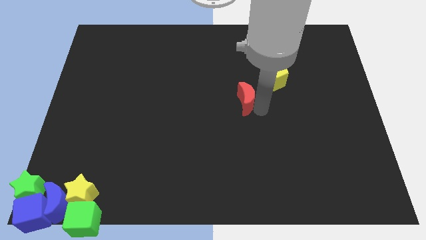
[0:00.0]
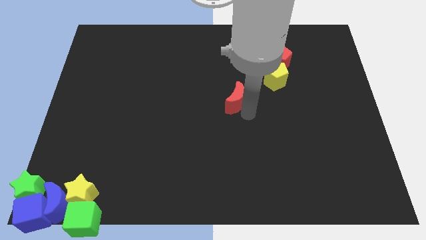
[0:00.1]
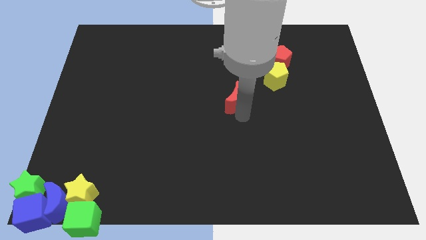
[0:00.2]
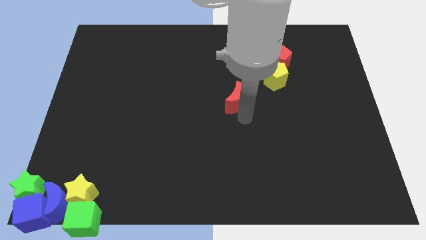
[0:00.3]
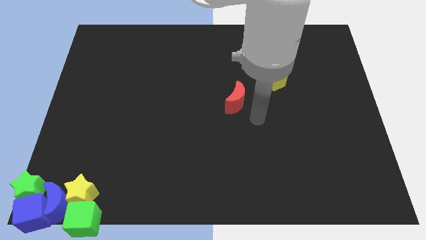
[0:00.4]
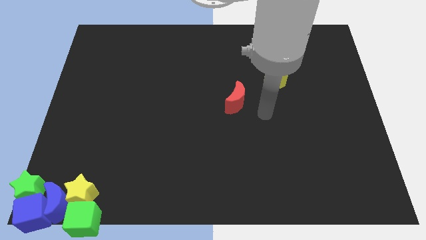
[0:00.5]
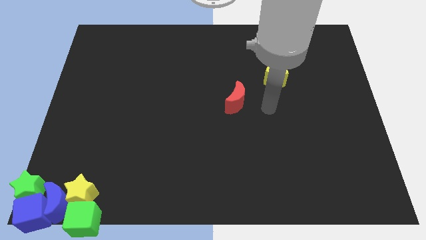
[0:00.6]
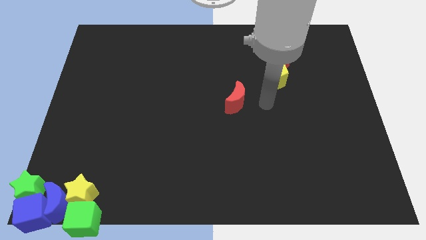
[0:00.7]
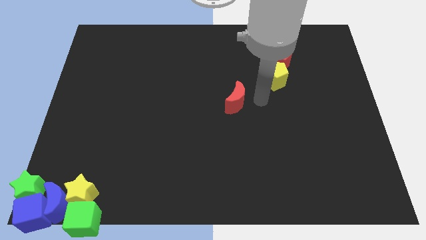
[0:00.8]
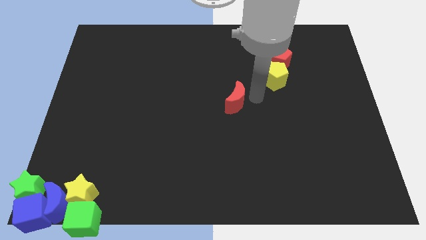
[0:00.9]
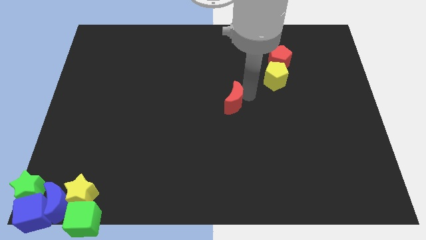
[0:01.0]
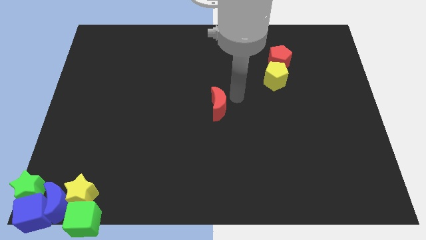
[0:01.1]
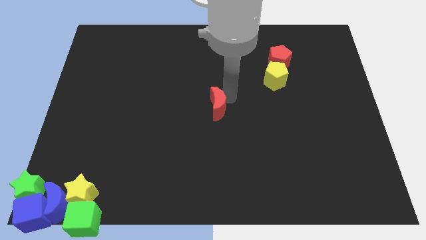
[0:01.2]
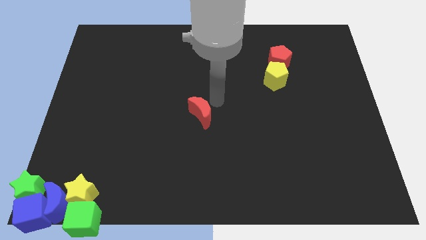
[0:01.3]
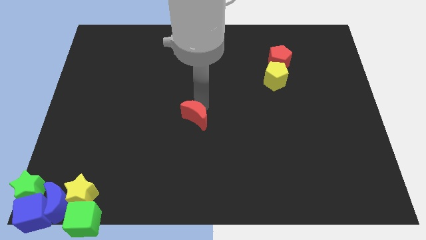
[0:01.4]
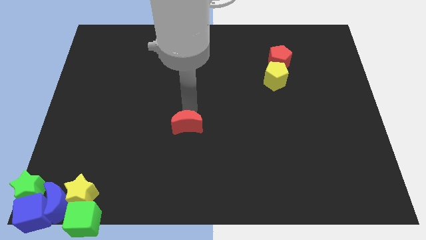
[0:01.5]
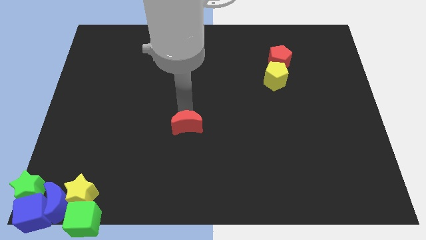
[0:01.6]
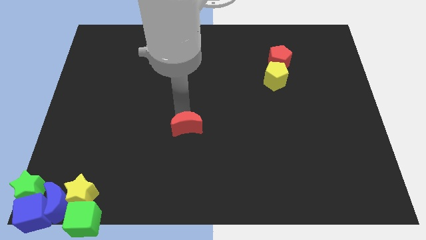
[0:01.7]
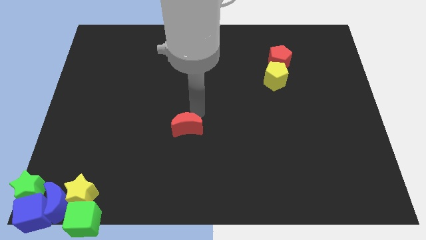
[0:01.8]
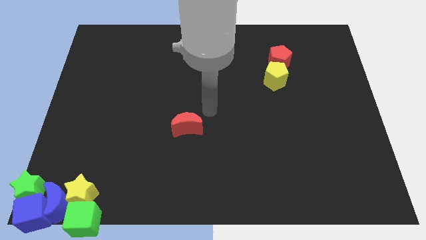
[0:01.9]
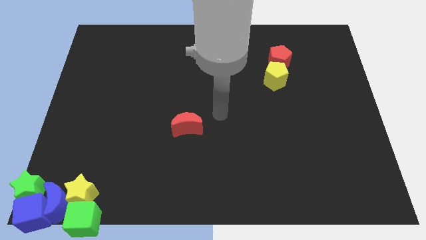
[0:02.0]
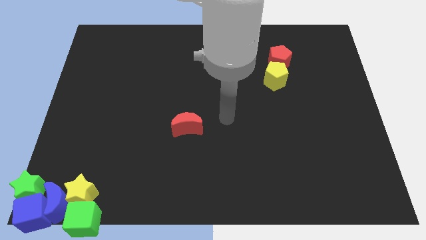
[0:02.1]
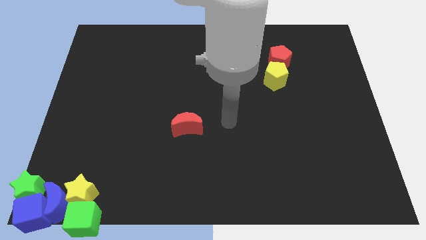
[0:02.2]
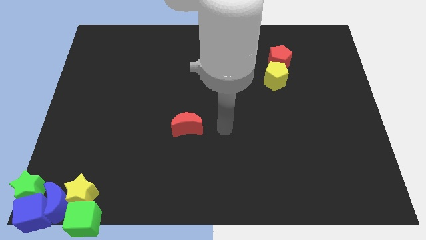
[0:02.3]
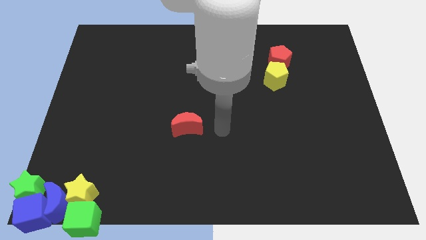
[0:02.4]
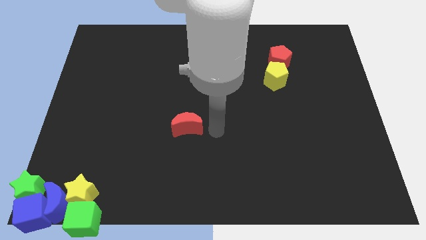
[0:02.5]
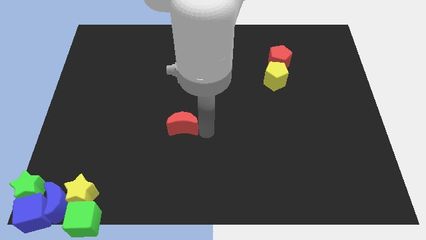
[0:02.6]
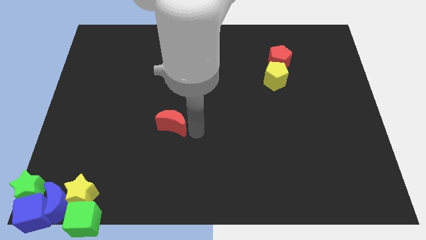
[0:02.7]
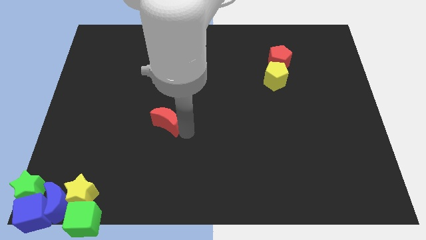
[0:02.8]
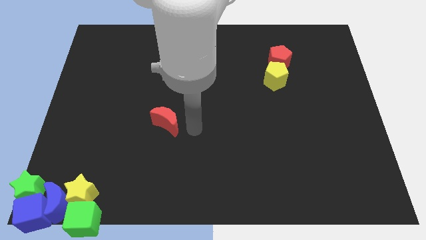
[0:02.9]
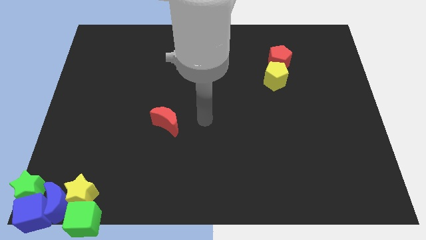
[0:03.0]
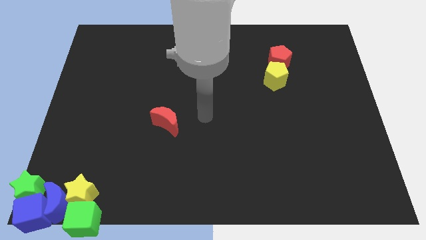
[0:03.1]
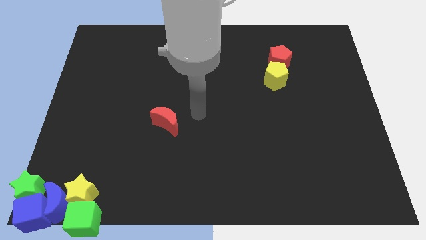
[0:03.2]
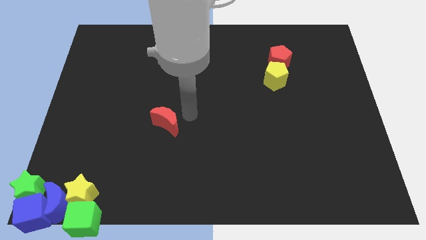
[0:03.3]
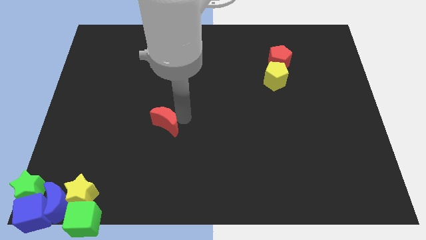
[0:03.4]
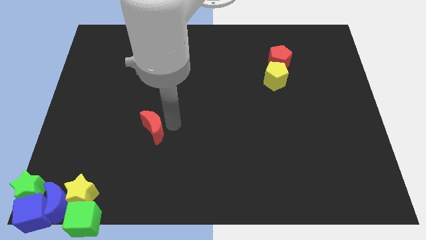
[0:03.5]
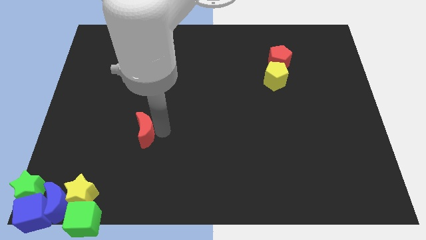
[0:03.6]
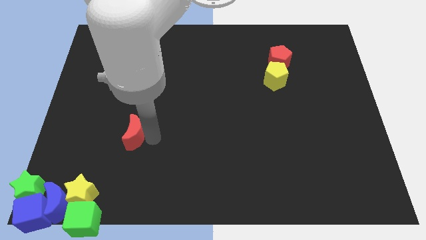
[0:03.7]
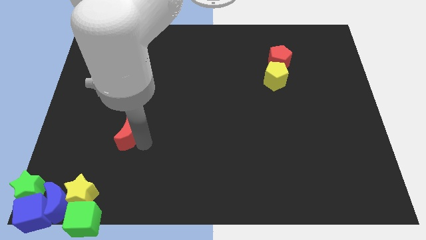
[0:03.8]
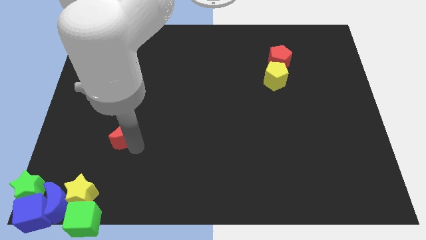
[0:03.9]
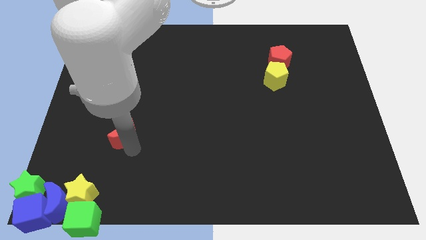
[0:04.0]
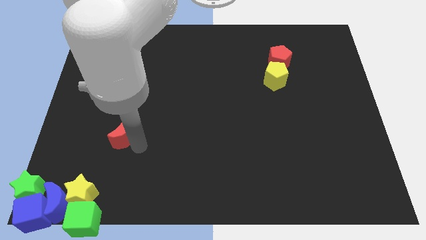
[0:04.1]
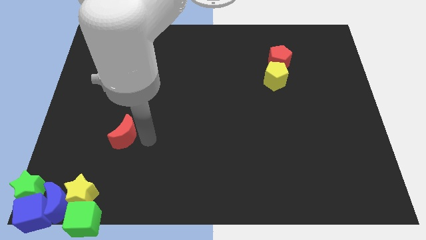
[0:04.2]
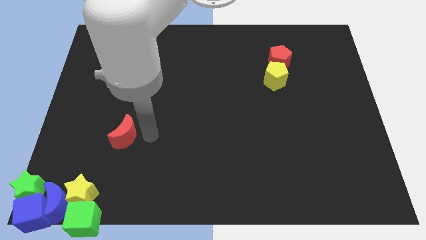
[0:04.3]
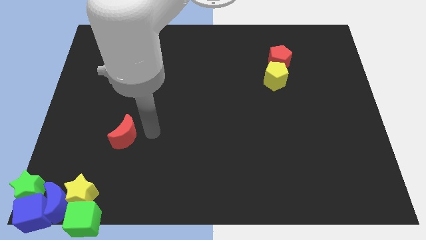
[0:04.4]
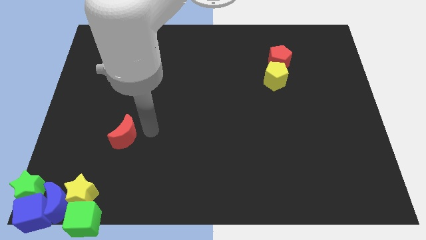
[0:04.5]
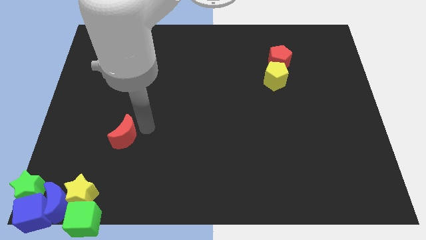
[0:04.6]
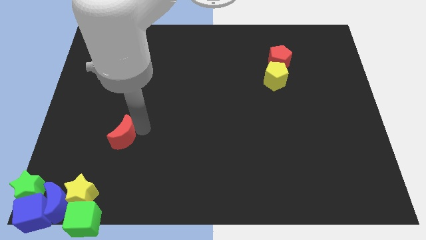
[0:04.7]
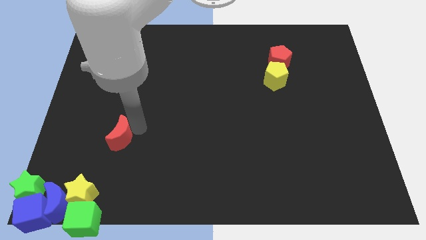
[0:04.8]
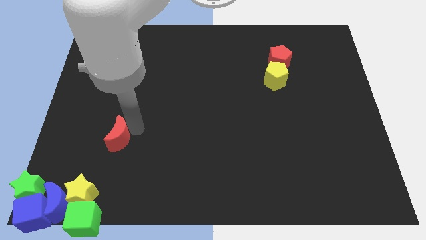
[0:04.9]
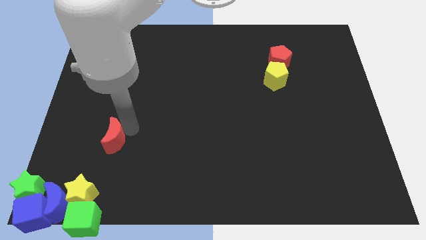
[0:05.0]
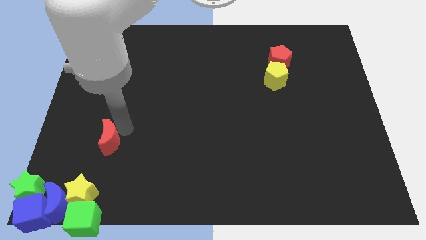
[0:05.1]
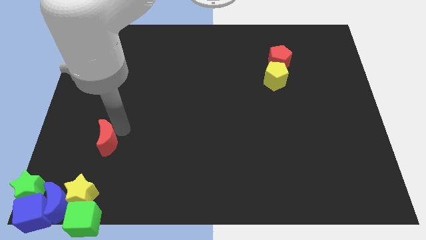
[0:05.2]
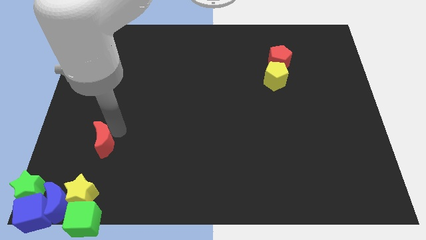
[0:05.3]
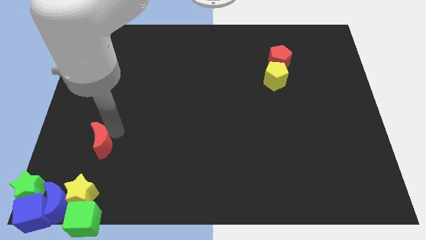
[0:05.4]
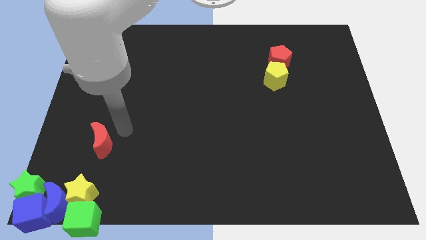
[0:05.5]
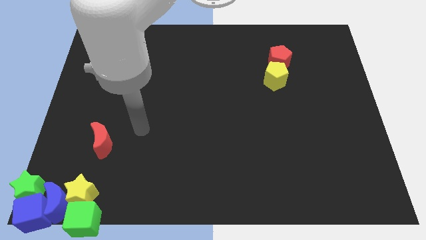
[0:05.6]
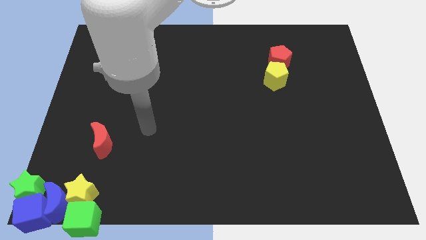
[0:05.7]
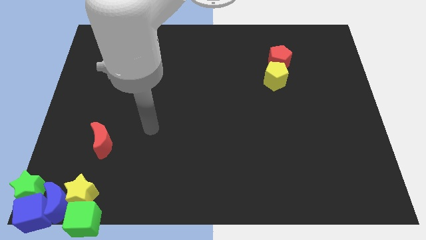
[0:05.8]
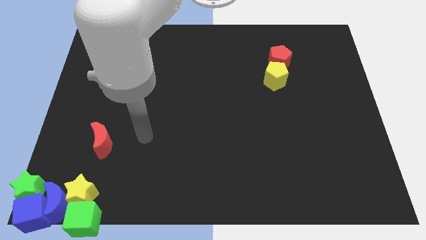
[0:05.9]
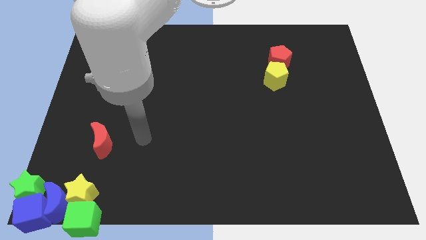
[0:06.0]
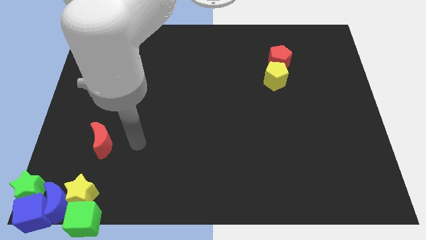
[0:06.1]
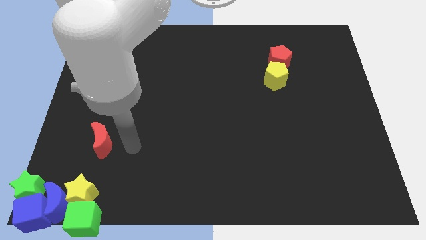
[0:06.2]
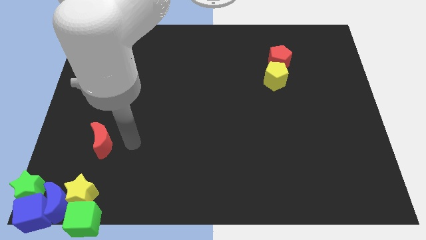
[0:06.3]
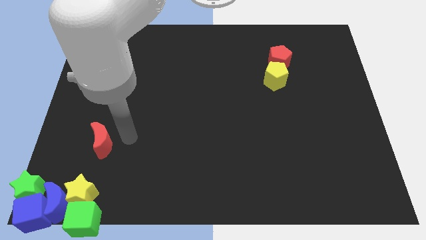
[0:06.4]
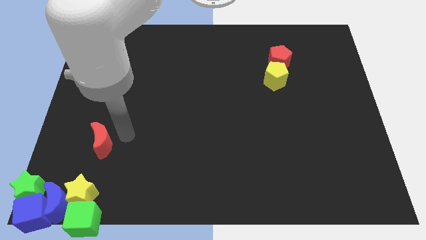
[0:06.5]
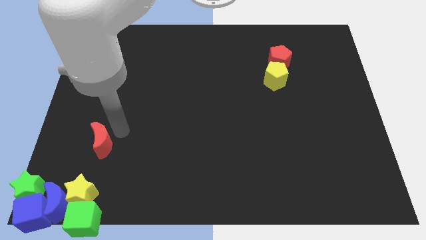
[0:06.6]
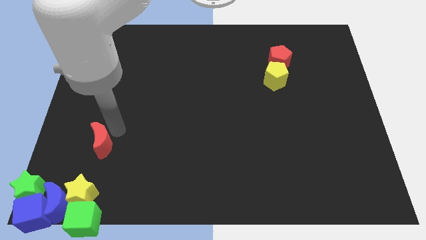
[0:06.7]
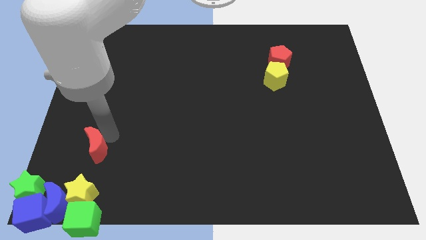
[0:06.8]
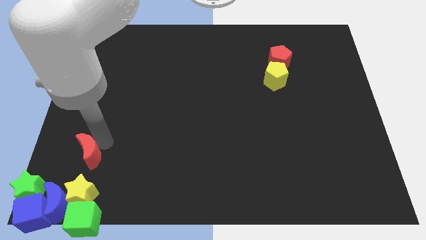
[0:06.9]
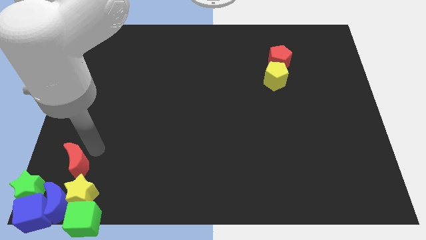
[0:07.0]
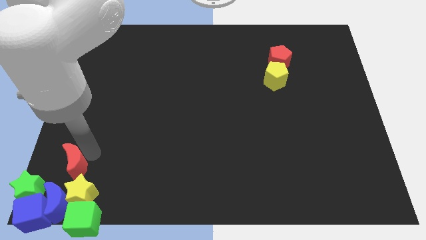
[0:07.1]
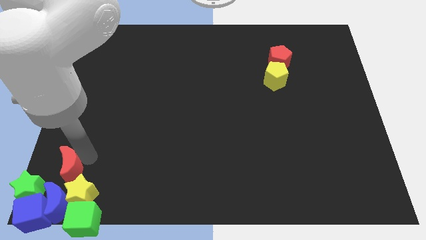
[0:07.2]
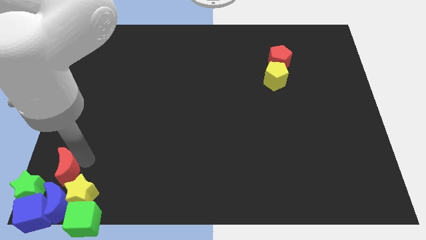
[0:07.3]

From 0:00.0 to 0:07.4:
push red crescent into the group of blocks

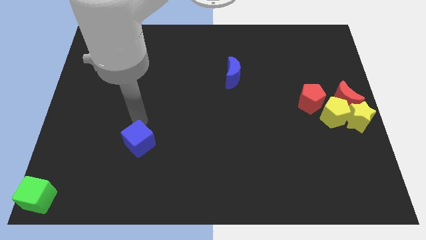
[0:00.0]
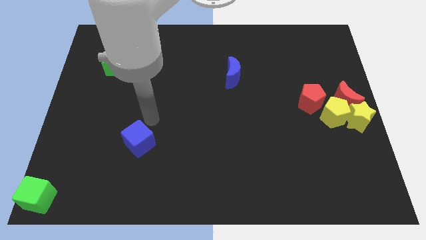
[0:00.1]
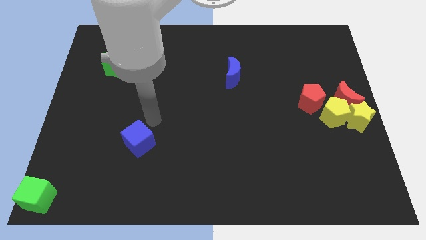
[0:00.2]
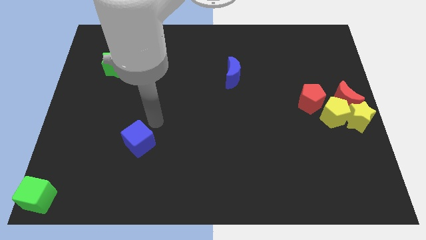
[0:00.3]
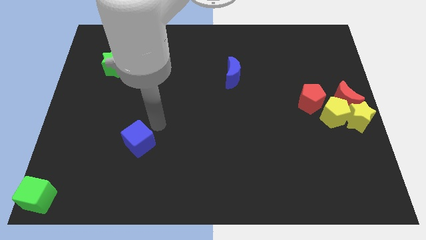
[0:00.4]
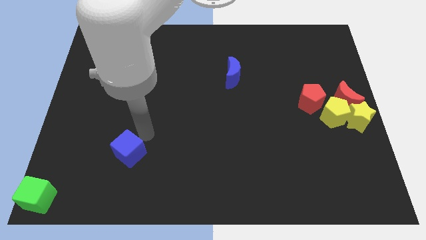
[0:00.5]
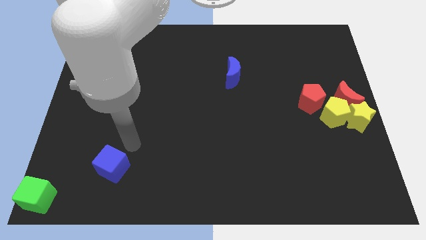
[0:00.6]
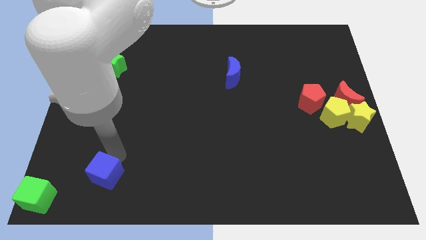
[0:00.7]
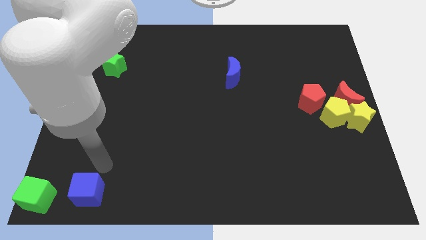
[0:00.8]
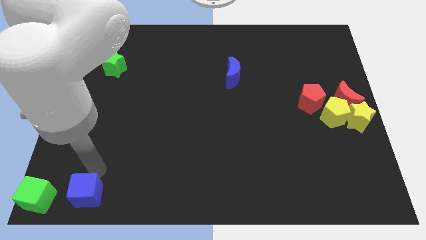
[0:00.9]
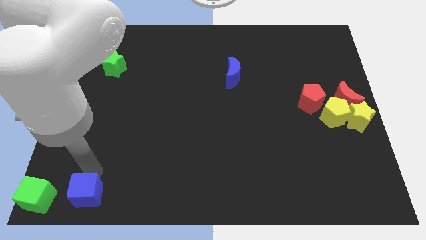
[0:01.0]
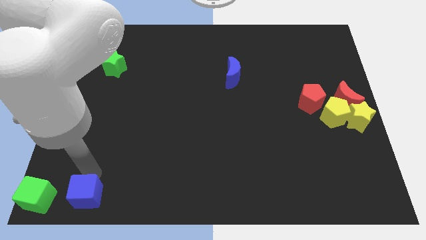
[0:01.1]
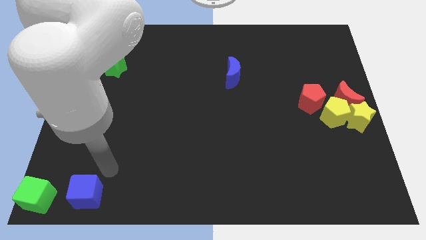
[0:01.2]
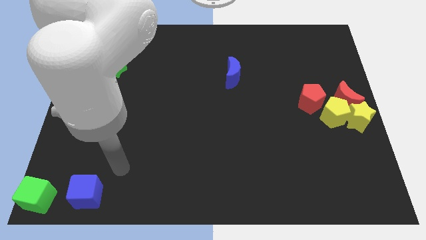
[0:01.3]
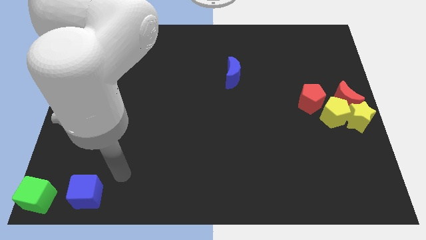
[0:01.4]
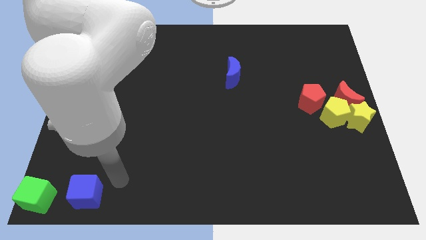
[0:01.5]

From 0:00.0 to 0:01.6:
move the blue cube to the right of the green cube
